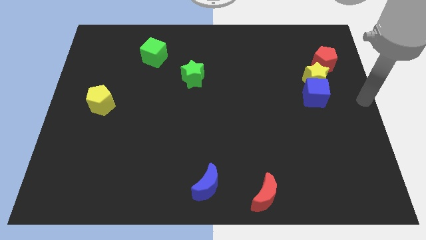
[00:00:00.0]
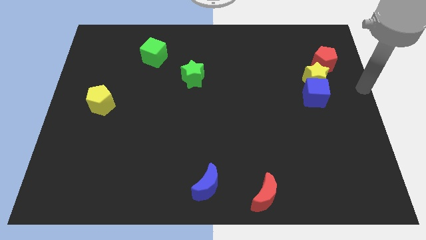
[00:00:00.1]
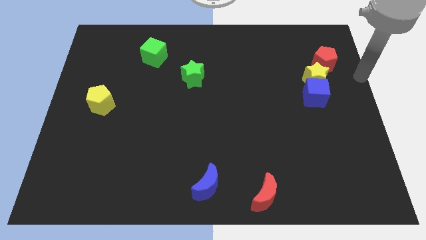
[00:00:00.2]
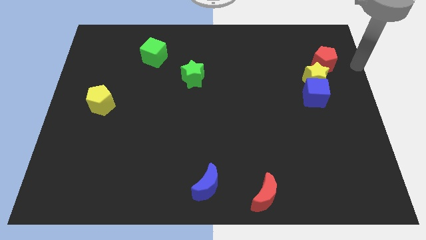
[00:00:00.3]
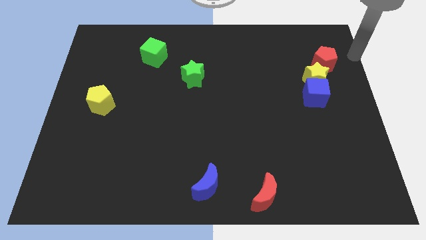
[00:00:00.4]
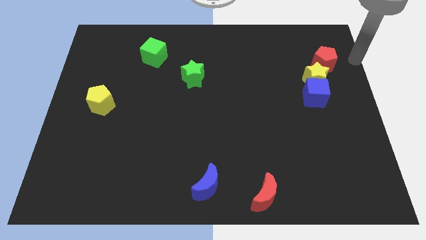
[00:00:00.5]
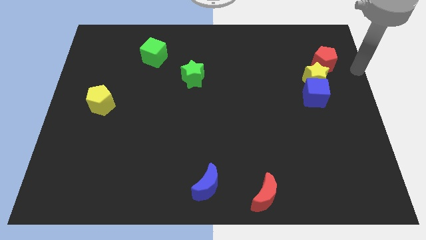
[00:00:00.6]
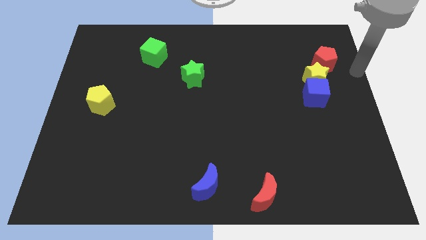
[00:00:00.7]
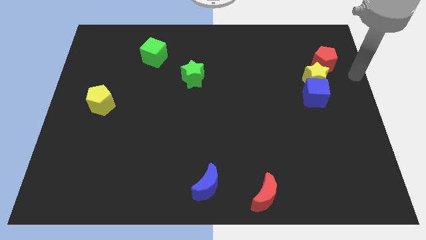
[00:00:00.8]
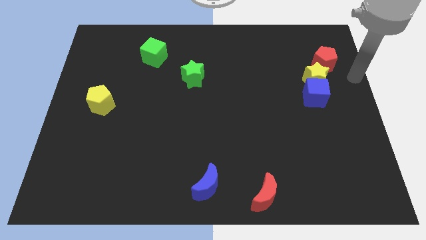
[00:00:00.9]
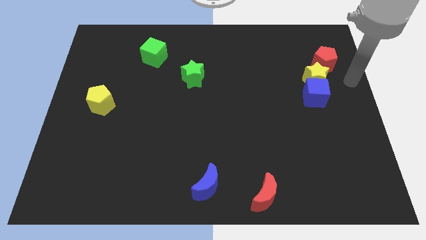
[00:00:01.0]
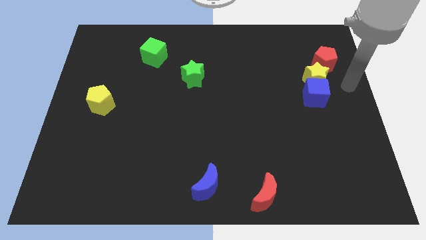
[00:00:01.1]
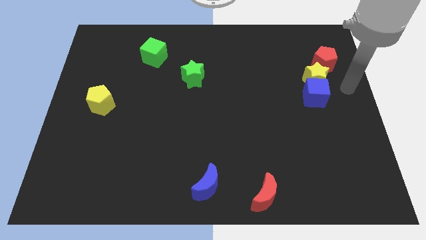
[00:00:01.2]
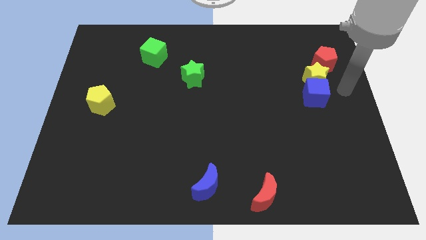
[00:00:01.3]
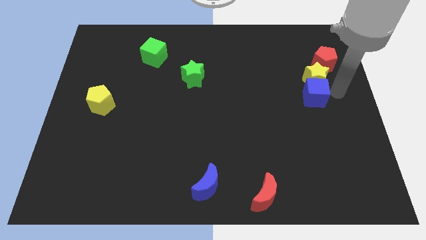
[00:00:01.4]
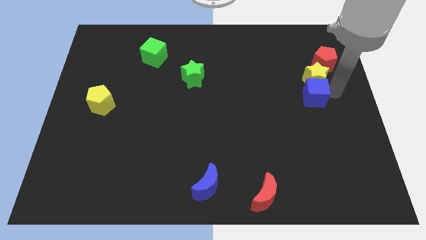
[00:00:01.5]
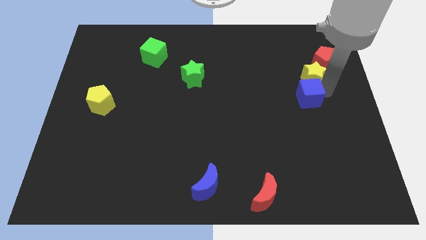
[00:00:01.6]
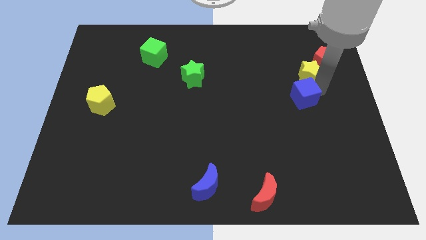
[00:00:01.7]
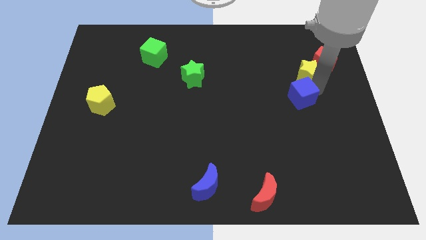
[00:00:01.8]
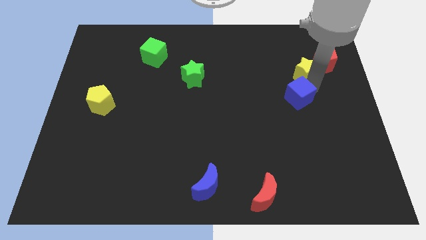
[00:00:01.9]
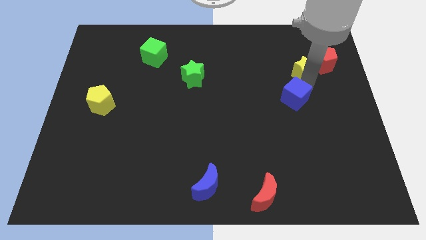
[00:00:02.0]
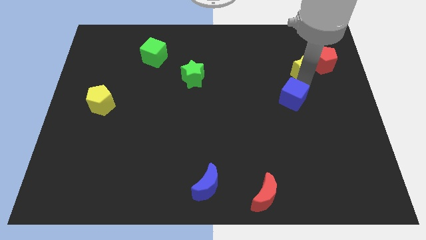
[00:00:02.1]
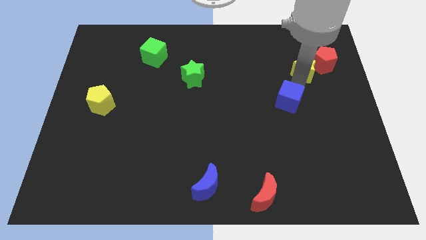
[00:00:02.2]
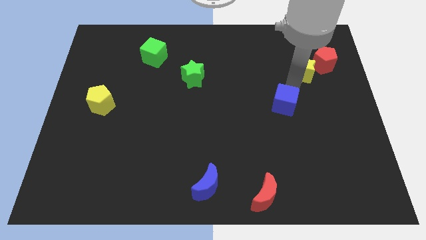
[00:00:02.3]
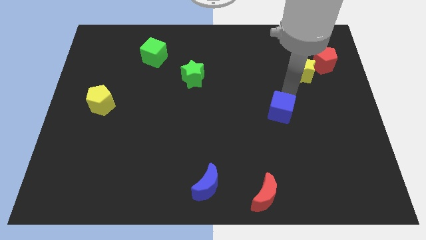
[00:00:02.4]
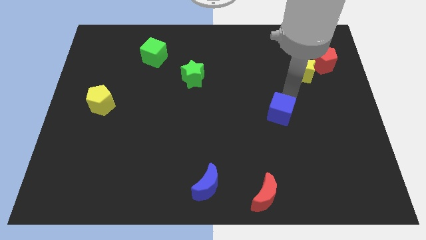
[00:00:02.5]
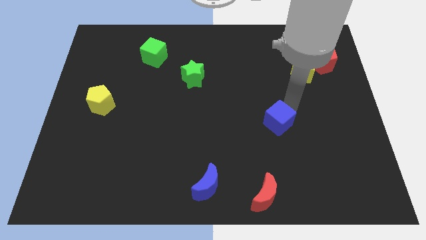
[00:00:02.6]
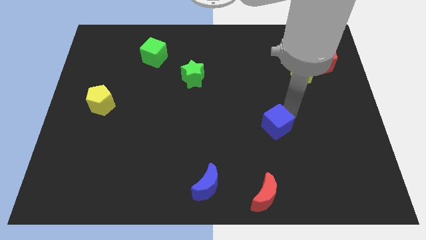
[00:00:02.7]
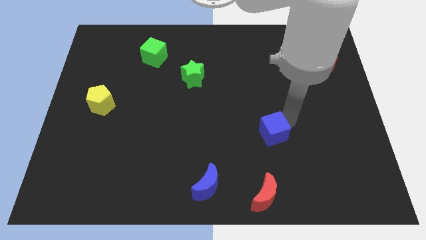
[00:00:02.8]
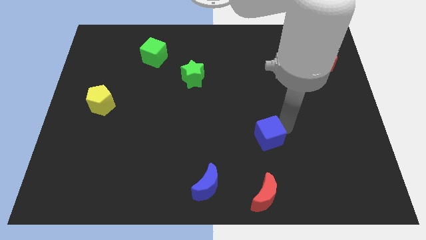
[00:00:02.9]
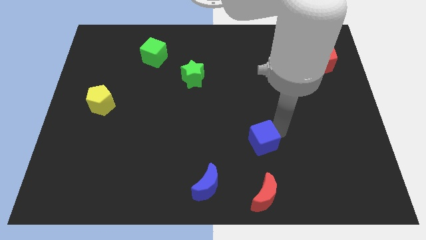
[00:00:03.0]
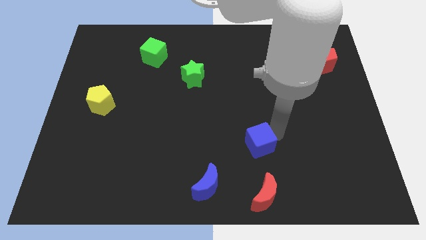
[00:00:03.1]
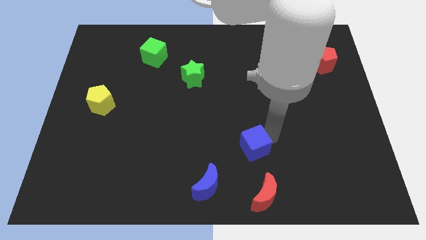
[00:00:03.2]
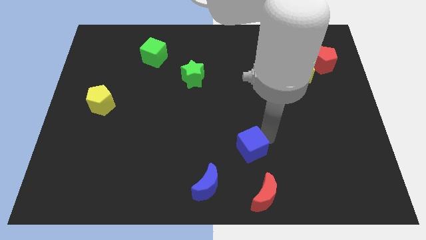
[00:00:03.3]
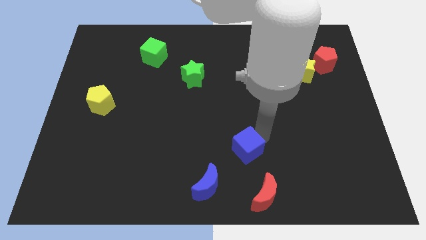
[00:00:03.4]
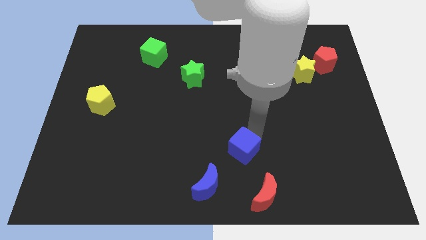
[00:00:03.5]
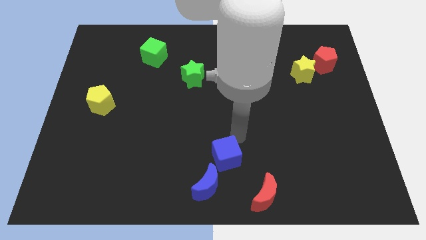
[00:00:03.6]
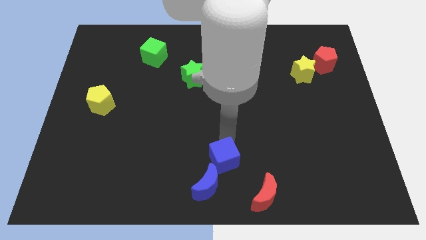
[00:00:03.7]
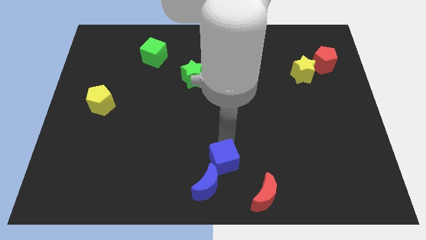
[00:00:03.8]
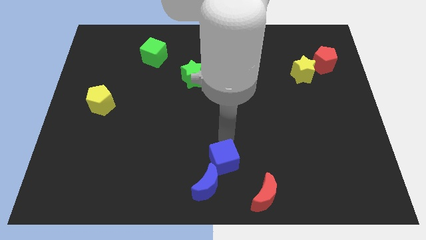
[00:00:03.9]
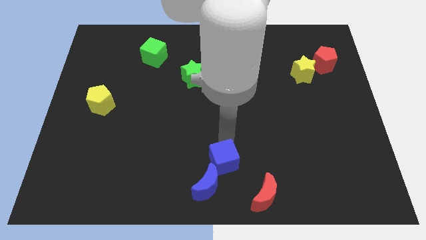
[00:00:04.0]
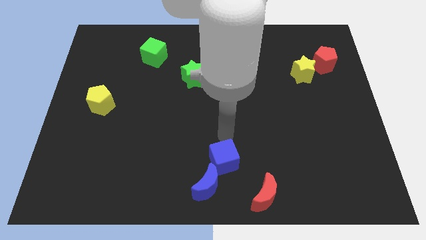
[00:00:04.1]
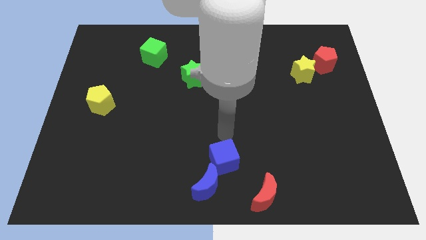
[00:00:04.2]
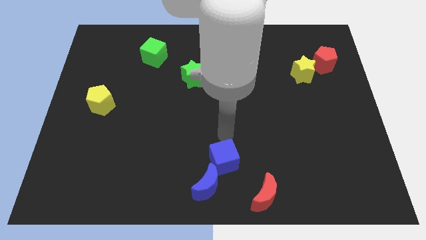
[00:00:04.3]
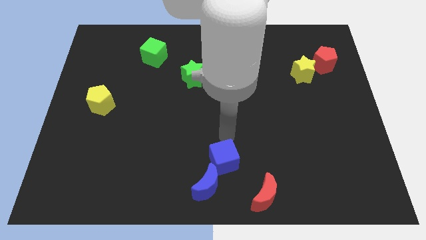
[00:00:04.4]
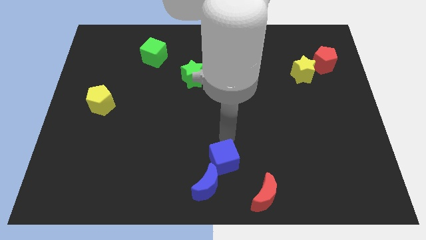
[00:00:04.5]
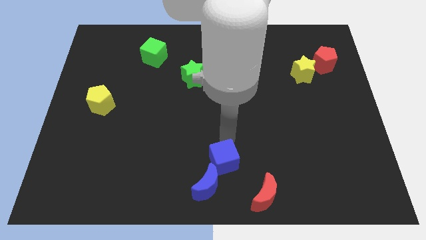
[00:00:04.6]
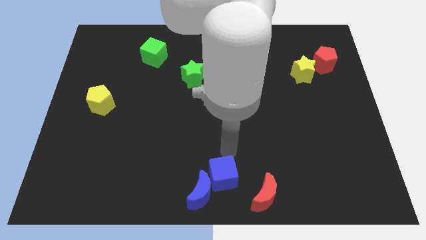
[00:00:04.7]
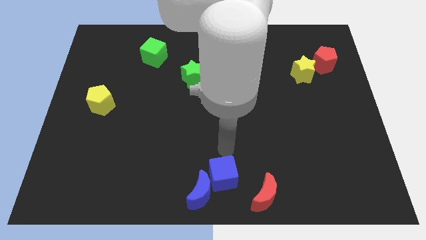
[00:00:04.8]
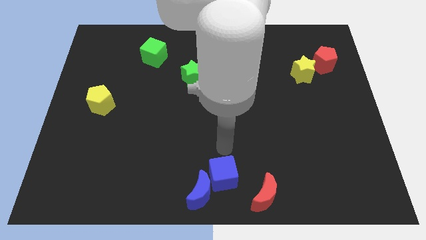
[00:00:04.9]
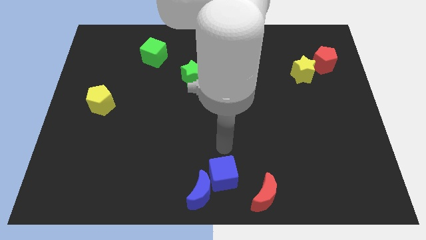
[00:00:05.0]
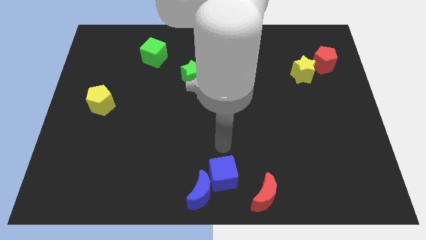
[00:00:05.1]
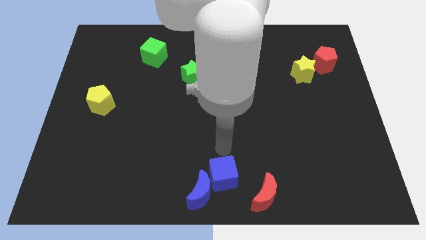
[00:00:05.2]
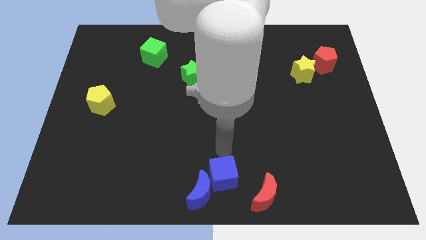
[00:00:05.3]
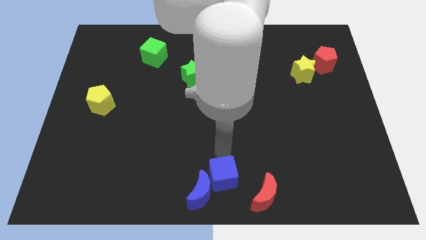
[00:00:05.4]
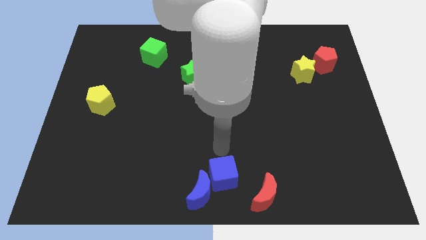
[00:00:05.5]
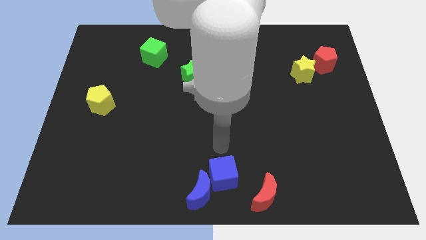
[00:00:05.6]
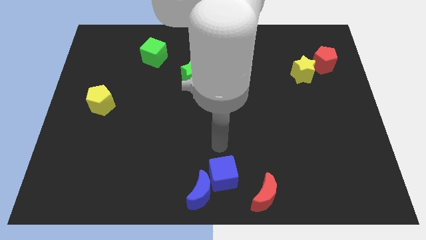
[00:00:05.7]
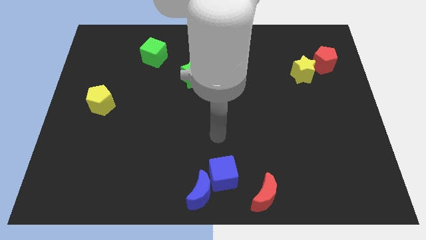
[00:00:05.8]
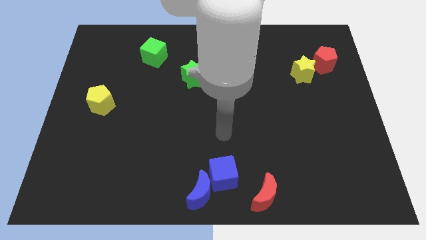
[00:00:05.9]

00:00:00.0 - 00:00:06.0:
push the blue cube away from the bottom side of the yellow star

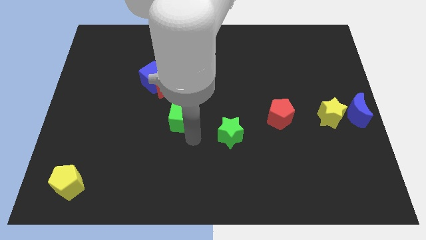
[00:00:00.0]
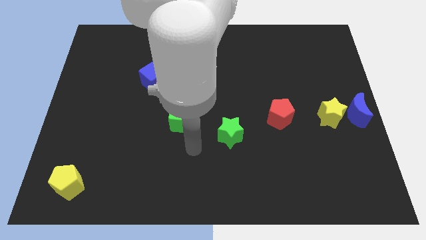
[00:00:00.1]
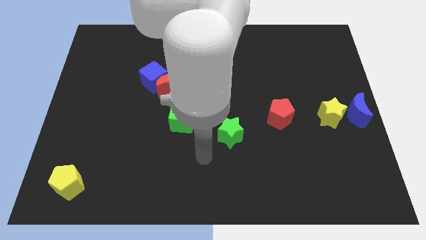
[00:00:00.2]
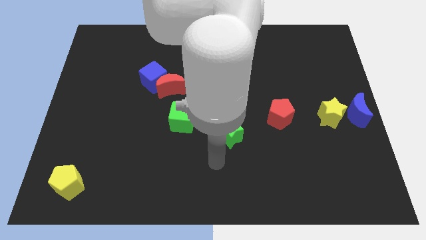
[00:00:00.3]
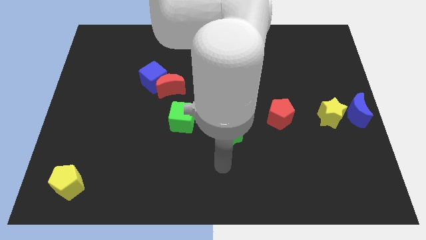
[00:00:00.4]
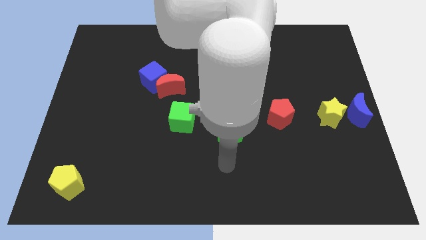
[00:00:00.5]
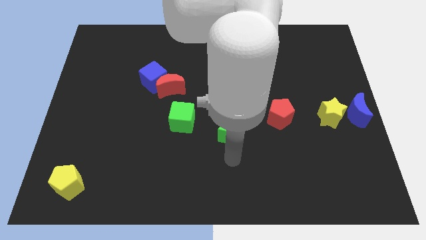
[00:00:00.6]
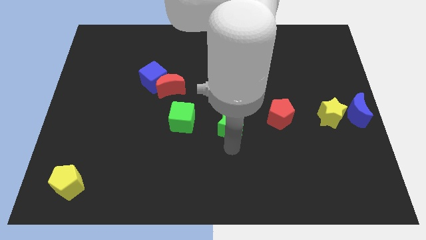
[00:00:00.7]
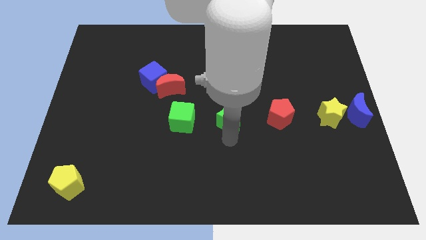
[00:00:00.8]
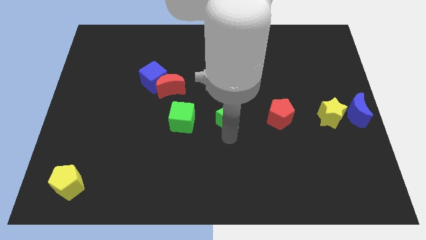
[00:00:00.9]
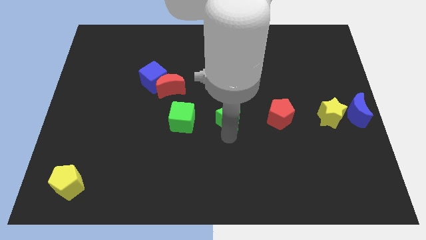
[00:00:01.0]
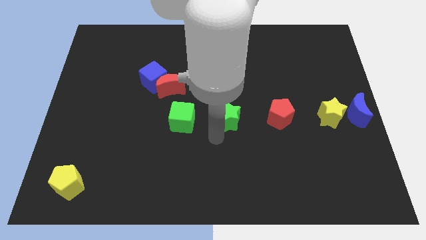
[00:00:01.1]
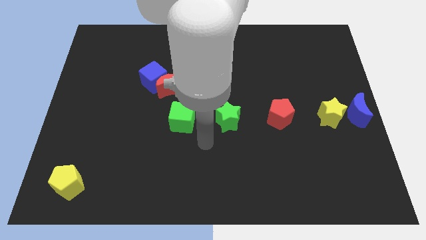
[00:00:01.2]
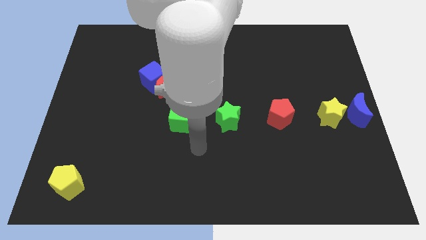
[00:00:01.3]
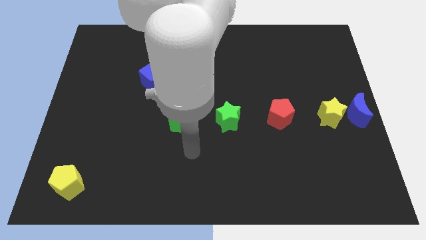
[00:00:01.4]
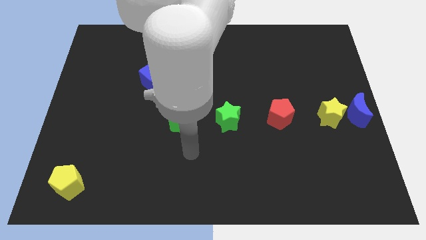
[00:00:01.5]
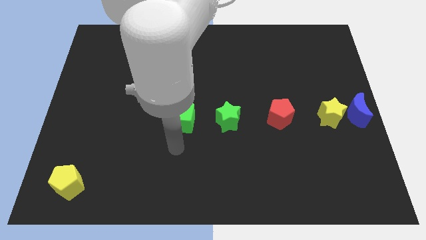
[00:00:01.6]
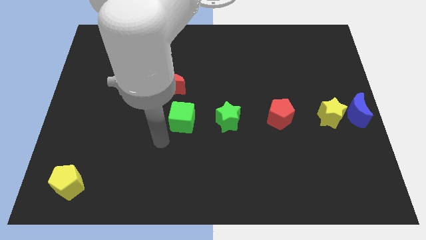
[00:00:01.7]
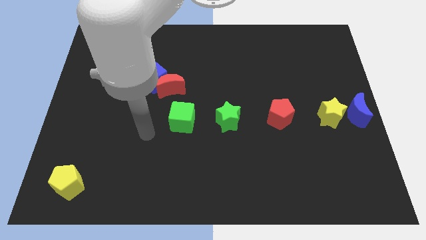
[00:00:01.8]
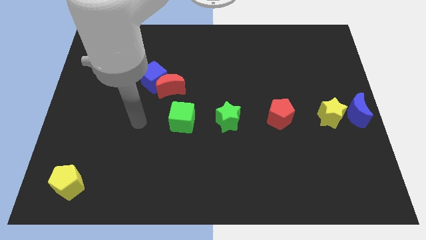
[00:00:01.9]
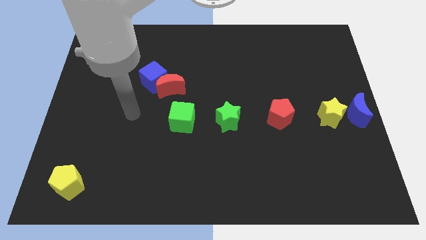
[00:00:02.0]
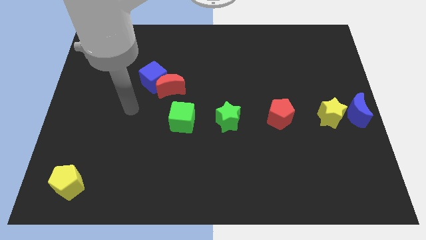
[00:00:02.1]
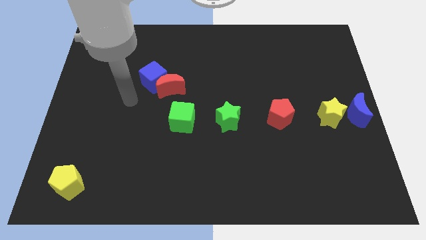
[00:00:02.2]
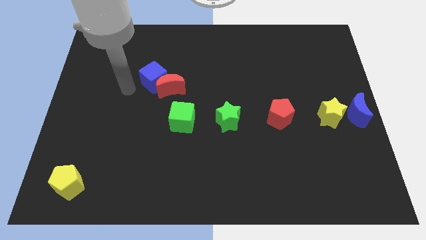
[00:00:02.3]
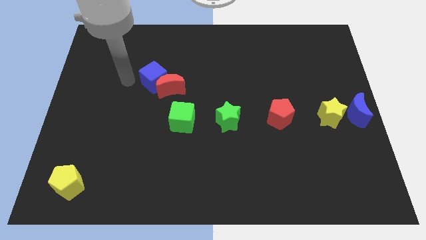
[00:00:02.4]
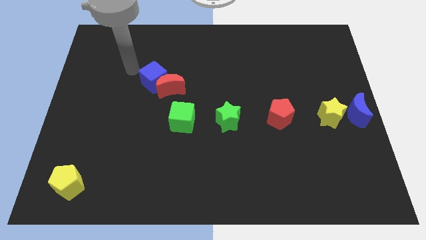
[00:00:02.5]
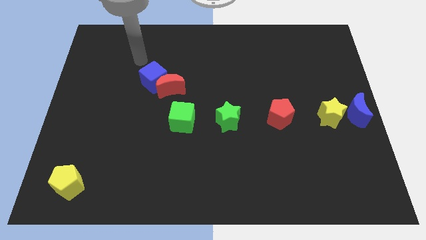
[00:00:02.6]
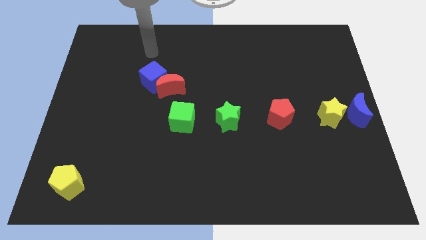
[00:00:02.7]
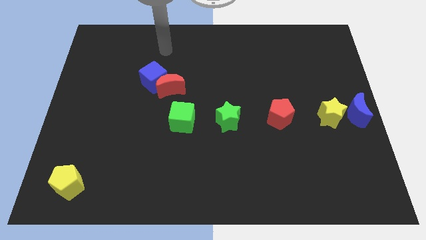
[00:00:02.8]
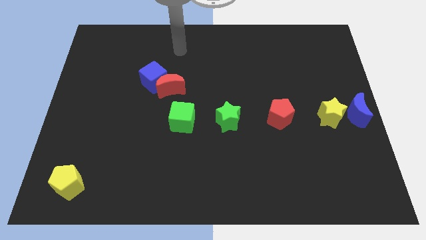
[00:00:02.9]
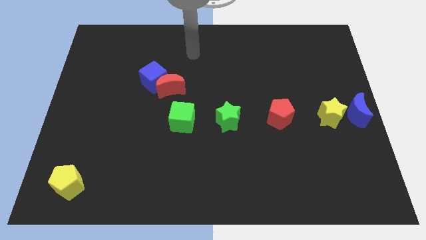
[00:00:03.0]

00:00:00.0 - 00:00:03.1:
place green star to the right of green cube
